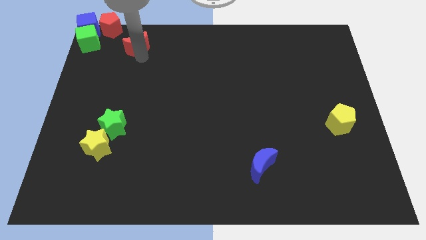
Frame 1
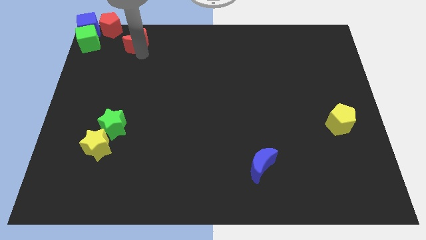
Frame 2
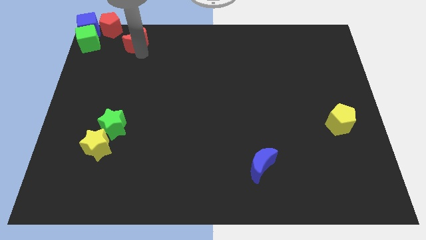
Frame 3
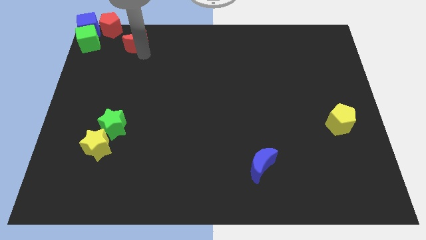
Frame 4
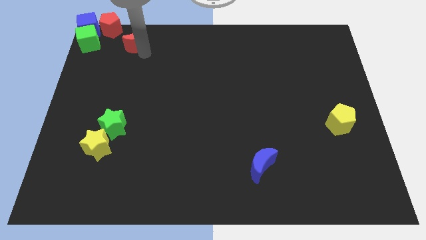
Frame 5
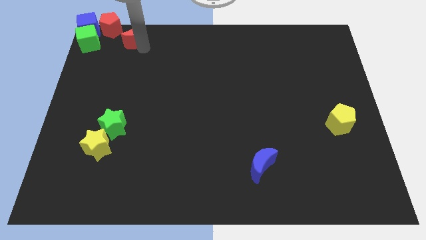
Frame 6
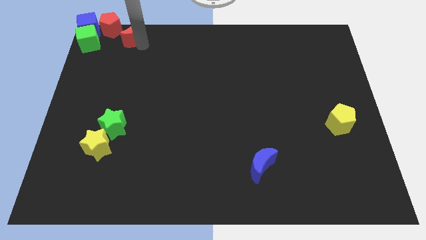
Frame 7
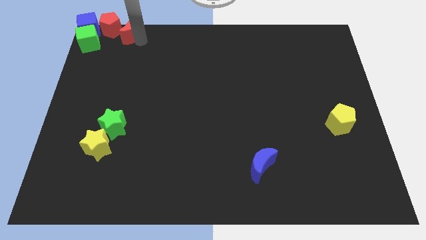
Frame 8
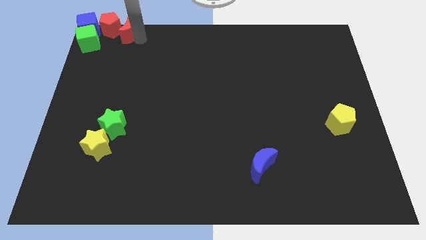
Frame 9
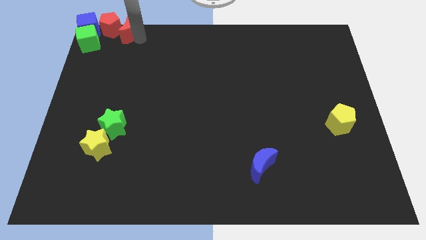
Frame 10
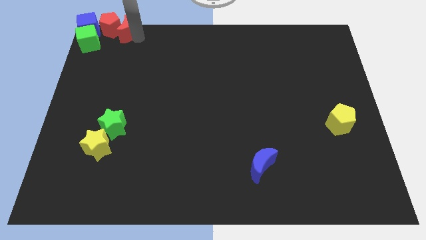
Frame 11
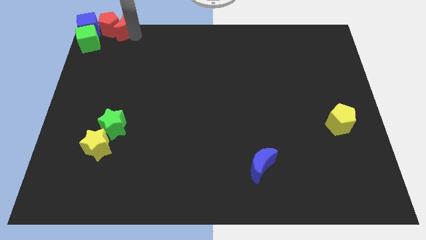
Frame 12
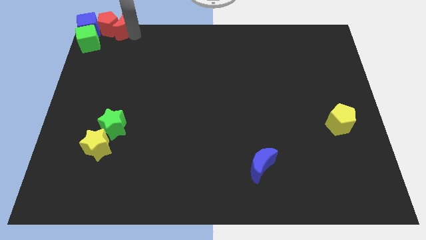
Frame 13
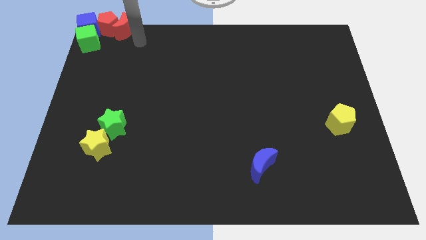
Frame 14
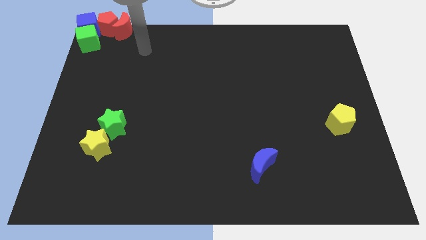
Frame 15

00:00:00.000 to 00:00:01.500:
move the red crescent to the right of the red pentagon

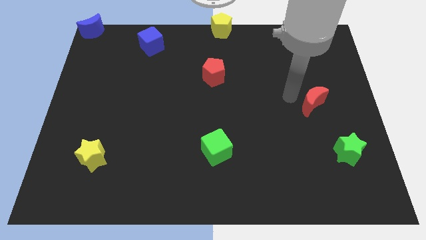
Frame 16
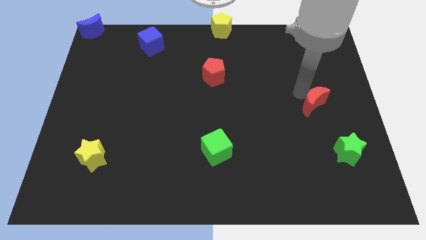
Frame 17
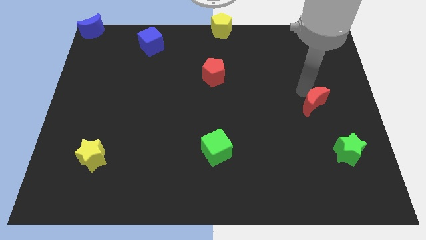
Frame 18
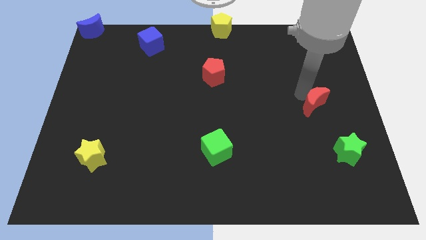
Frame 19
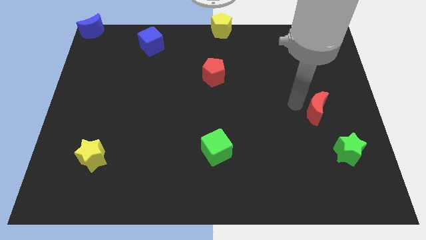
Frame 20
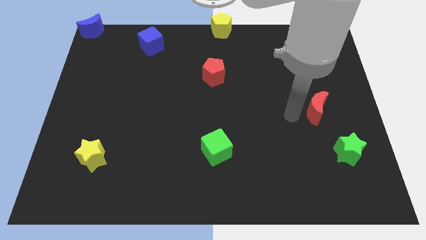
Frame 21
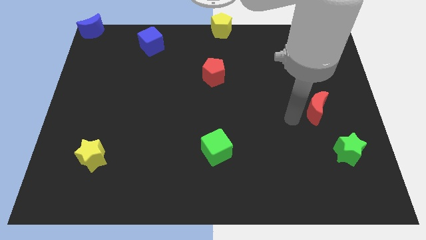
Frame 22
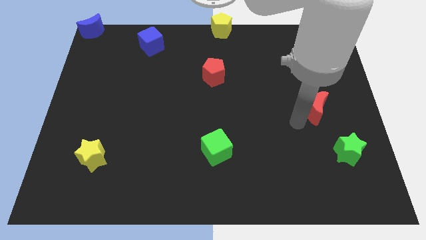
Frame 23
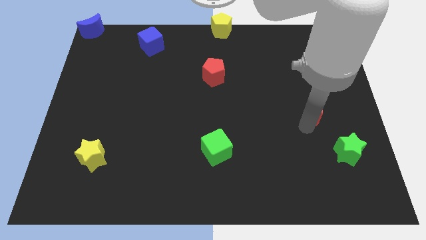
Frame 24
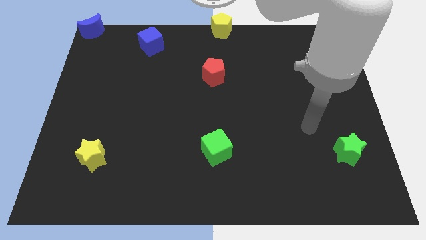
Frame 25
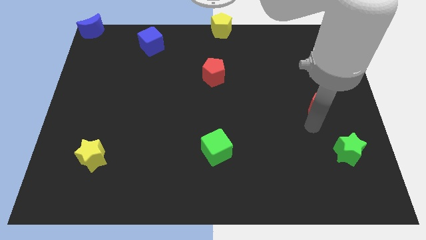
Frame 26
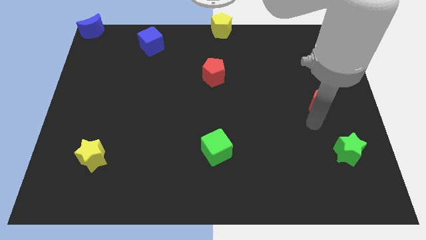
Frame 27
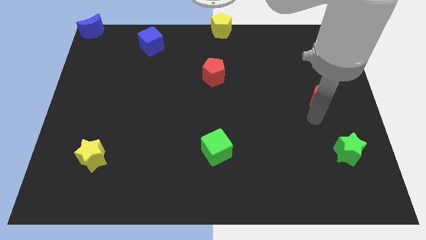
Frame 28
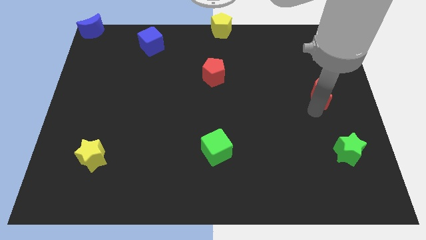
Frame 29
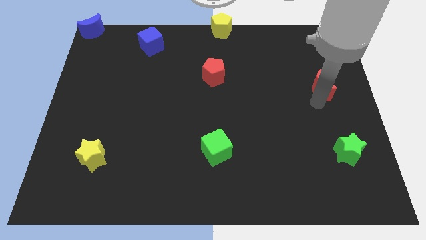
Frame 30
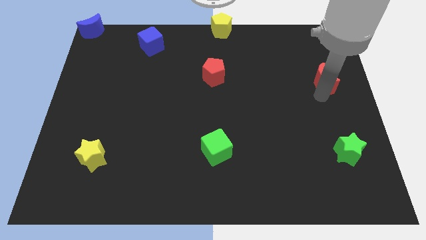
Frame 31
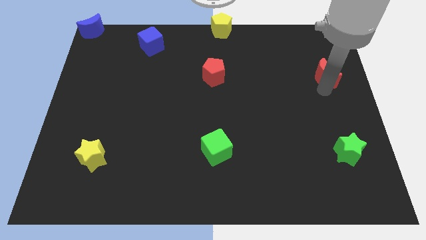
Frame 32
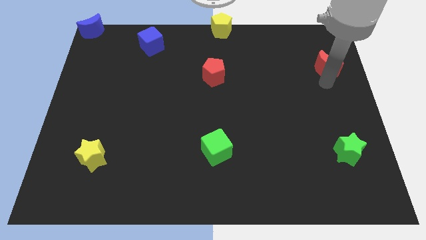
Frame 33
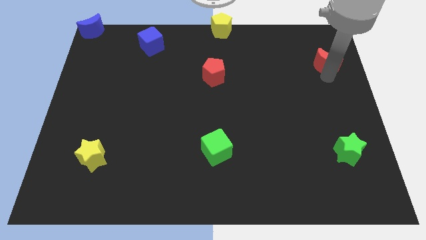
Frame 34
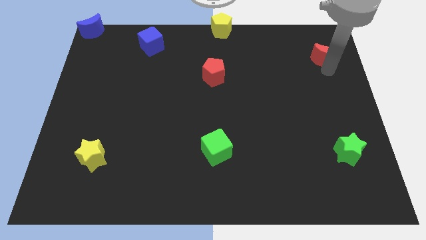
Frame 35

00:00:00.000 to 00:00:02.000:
put the red moon vertically above the green star

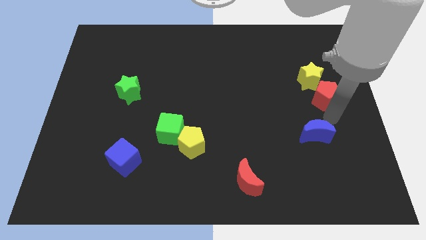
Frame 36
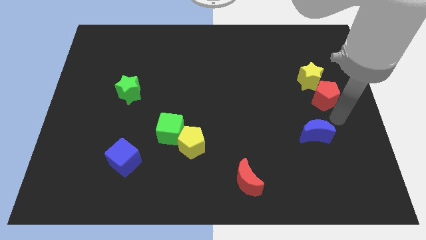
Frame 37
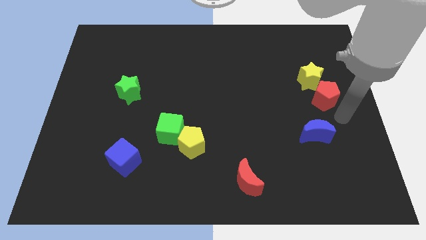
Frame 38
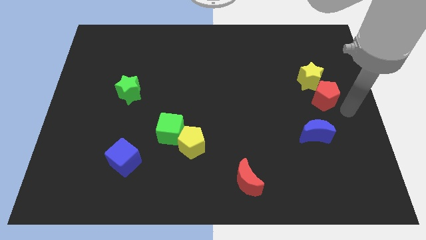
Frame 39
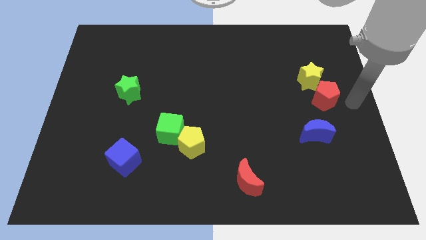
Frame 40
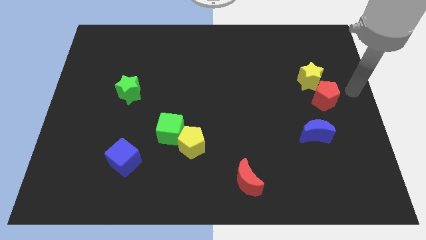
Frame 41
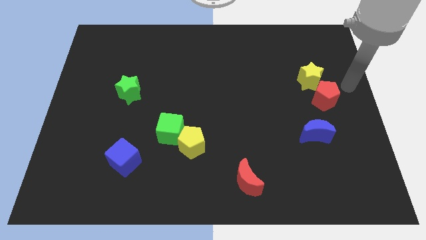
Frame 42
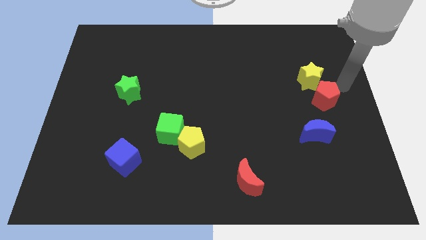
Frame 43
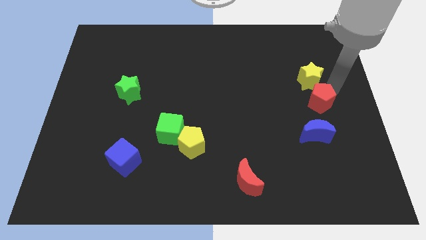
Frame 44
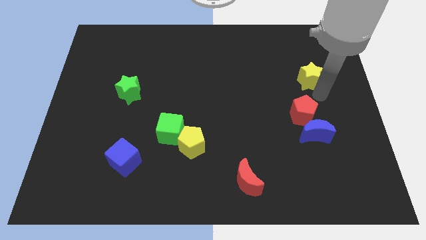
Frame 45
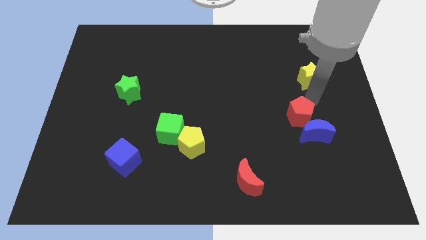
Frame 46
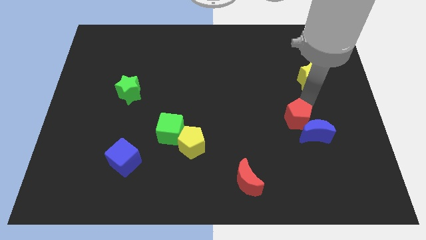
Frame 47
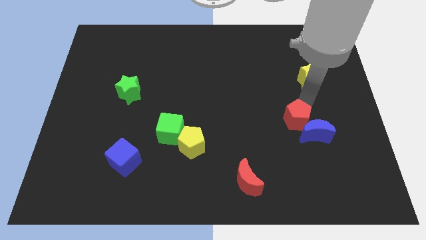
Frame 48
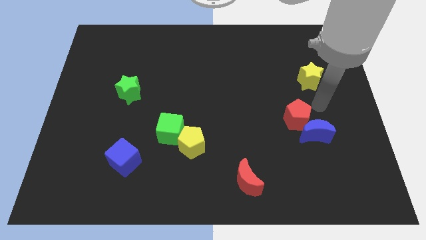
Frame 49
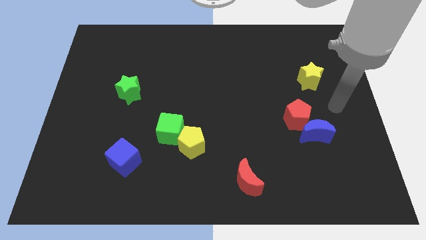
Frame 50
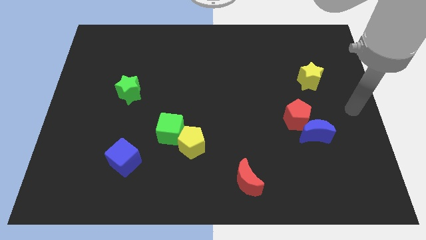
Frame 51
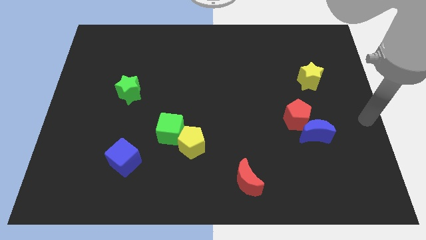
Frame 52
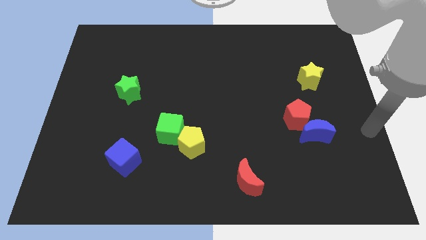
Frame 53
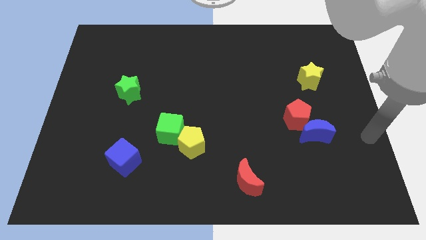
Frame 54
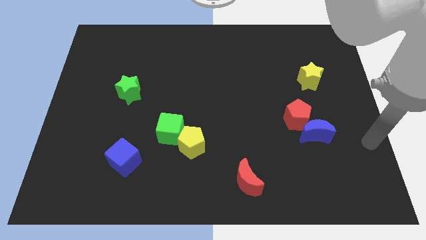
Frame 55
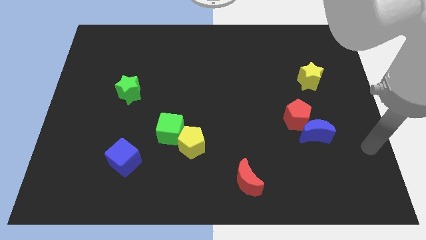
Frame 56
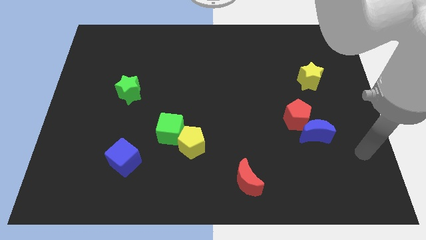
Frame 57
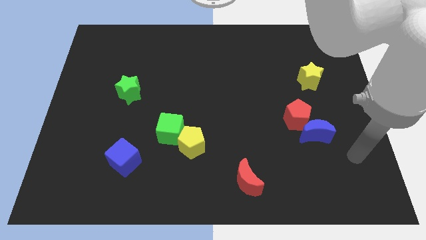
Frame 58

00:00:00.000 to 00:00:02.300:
push the red pentagon to the top left of blue crescent

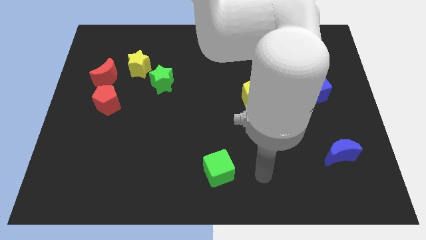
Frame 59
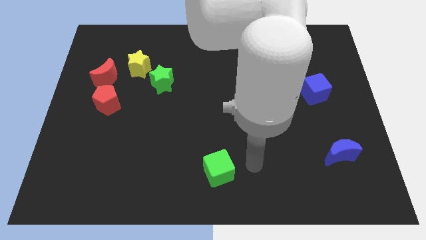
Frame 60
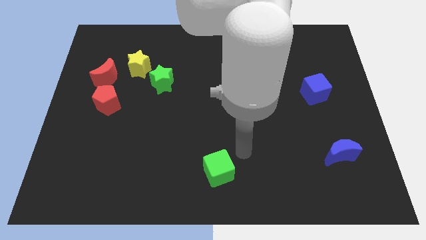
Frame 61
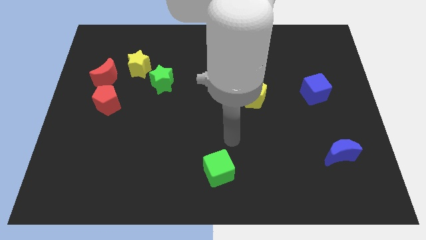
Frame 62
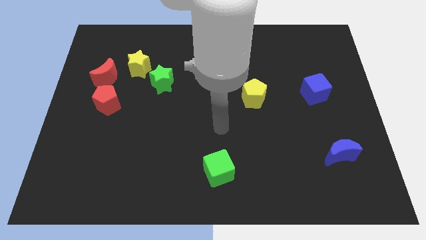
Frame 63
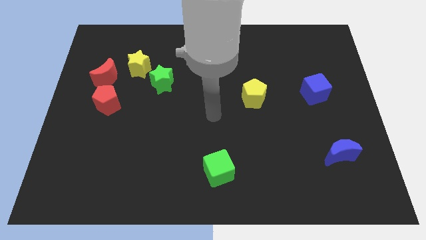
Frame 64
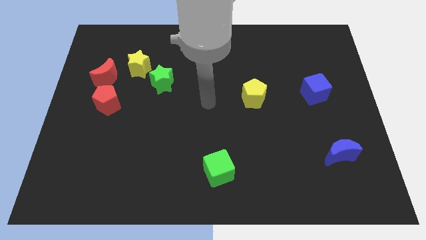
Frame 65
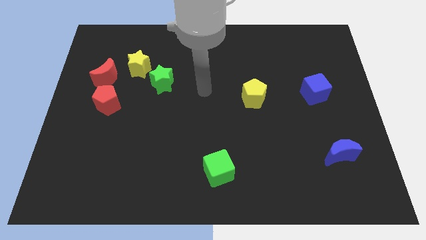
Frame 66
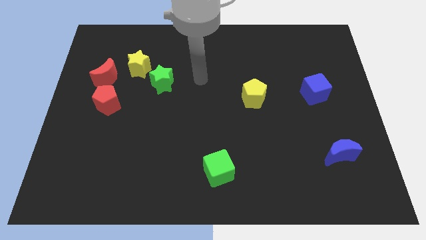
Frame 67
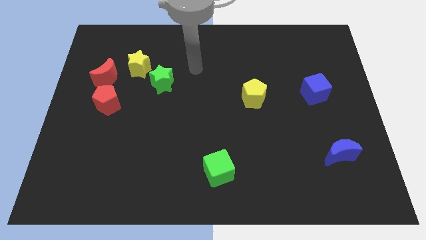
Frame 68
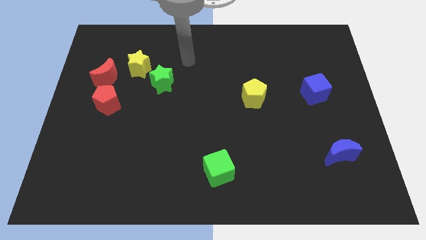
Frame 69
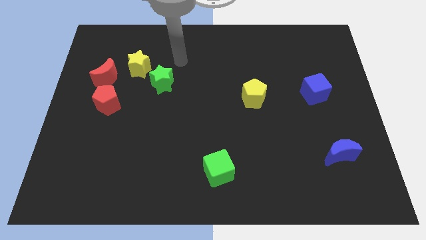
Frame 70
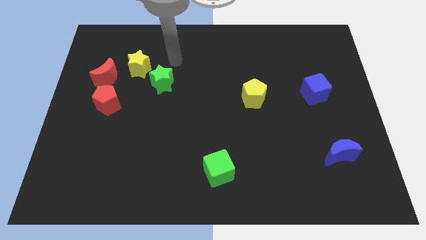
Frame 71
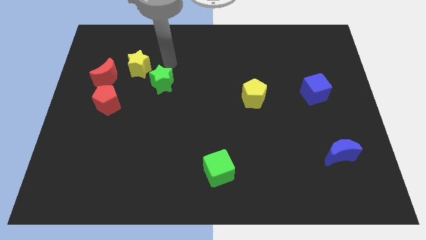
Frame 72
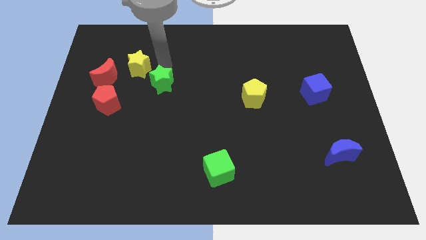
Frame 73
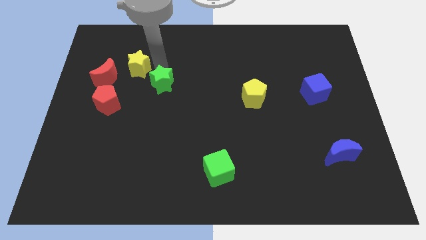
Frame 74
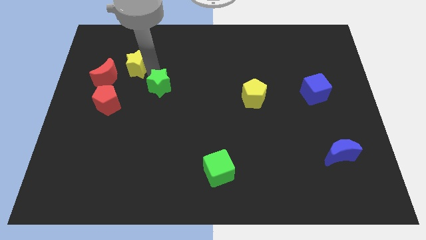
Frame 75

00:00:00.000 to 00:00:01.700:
touch the green star

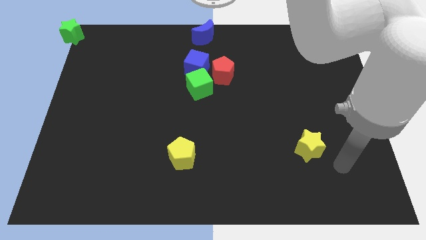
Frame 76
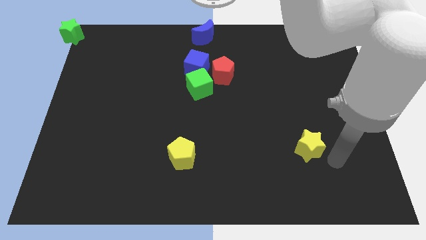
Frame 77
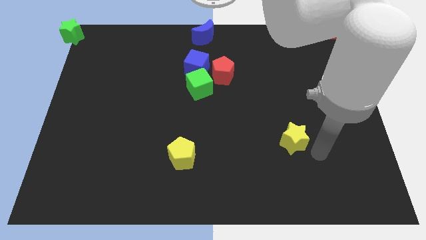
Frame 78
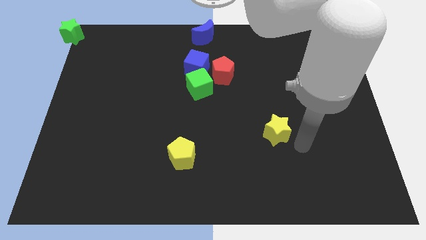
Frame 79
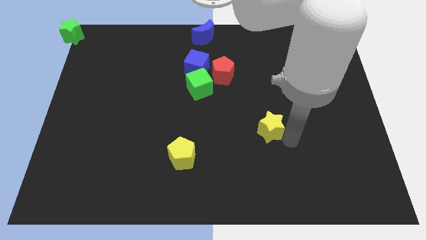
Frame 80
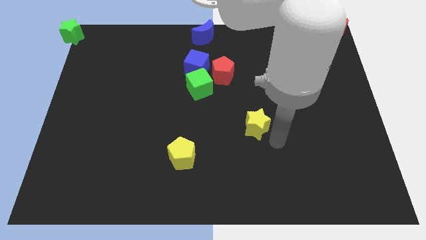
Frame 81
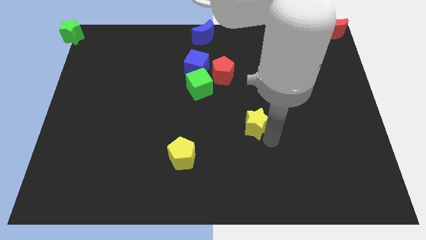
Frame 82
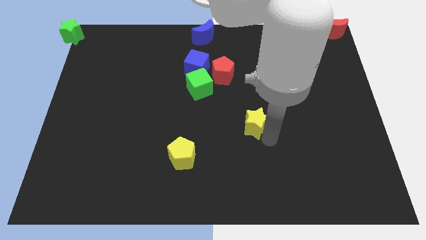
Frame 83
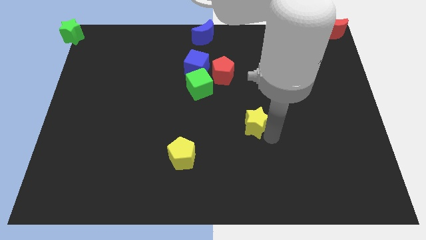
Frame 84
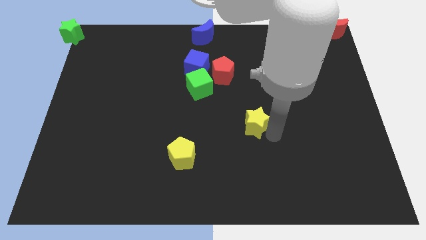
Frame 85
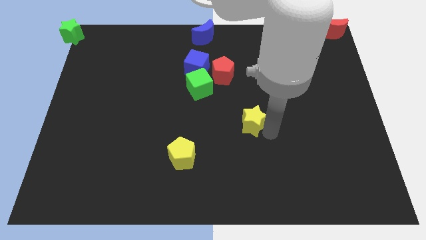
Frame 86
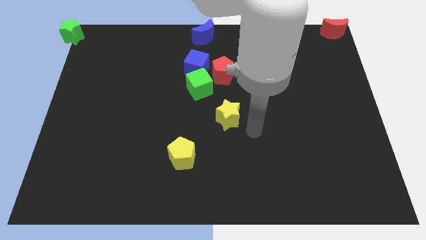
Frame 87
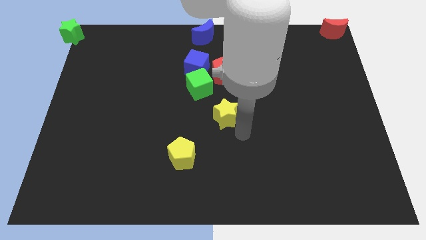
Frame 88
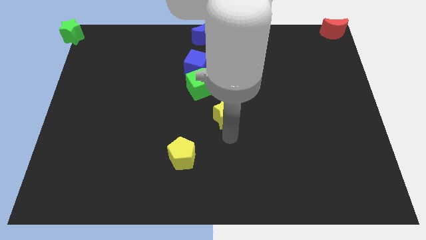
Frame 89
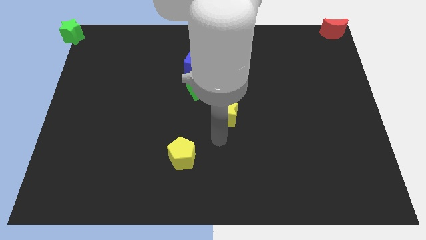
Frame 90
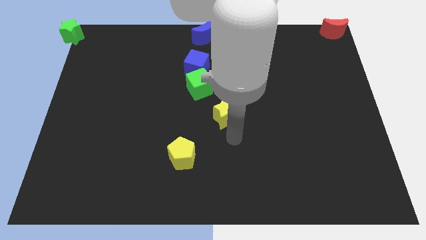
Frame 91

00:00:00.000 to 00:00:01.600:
move the yellow star towards the bottom side of the green cube
